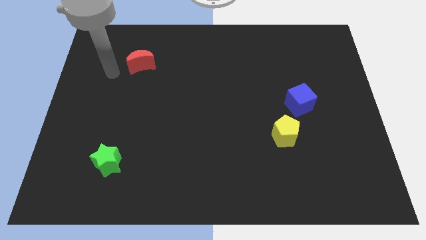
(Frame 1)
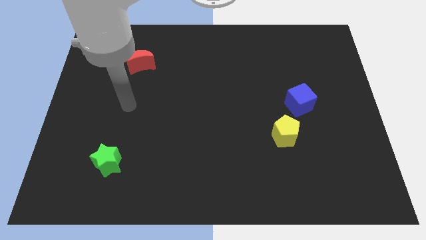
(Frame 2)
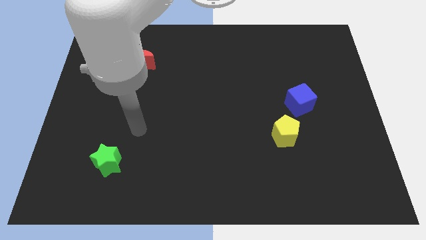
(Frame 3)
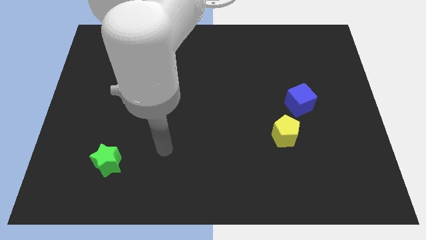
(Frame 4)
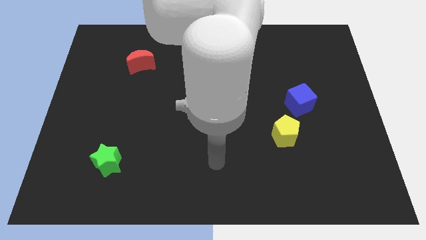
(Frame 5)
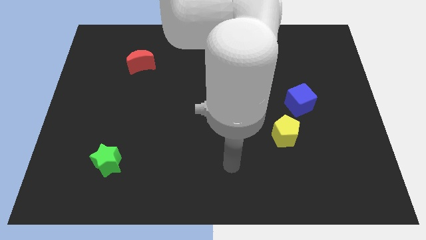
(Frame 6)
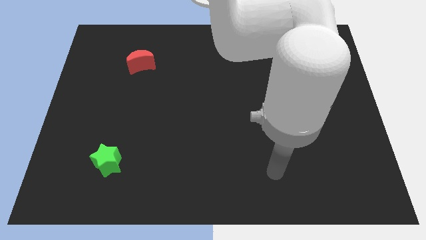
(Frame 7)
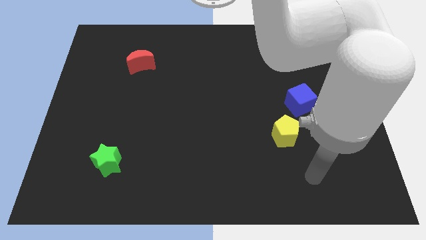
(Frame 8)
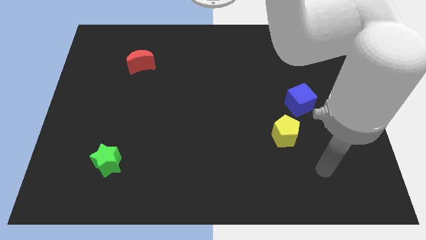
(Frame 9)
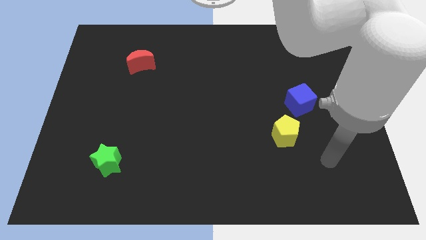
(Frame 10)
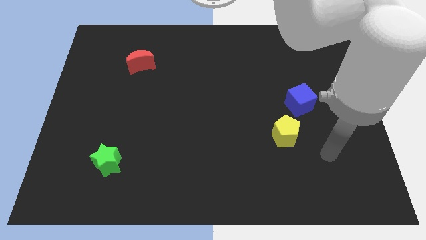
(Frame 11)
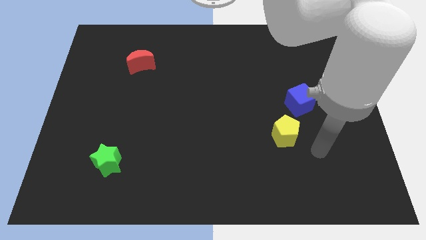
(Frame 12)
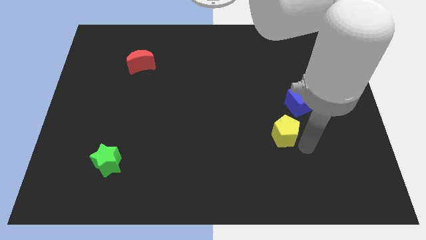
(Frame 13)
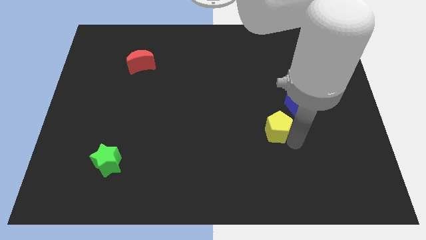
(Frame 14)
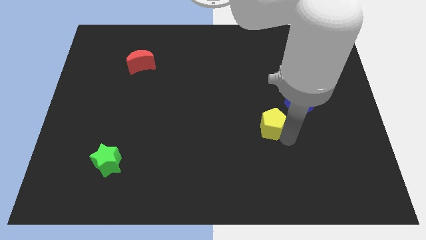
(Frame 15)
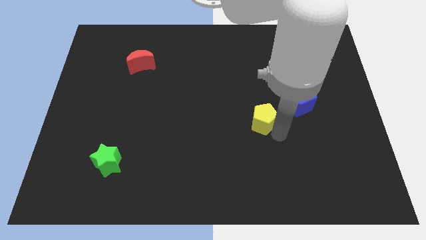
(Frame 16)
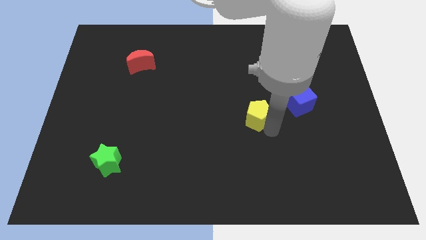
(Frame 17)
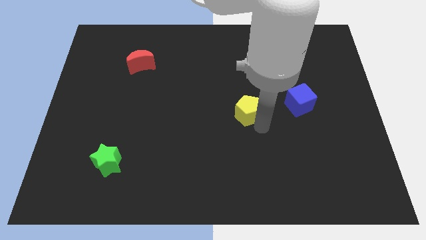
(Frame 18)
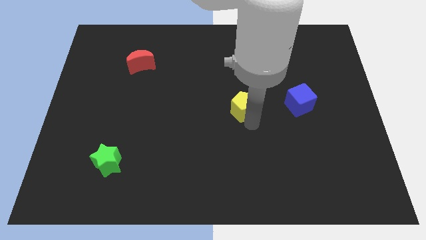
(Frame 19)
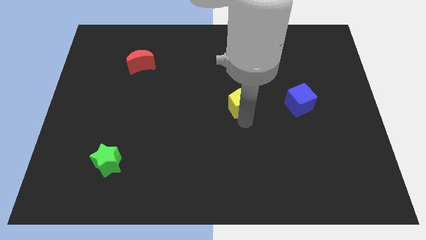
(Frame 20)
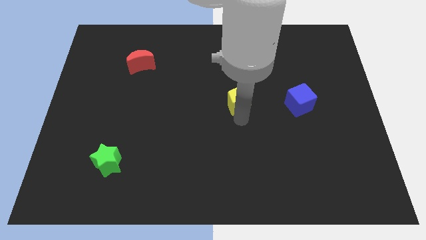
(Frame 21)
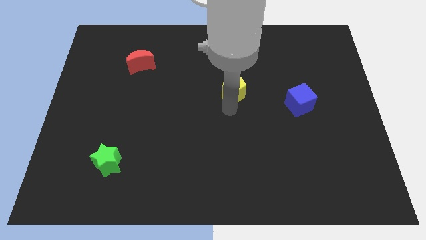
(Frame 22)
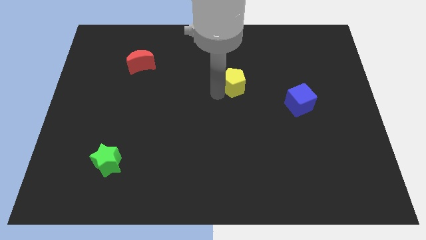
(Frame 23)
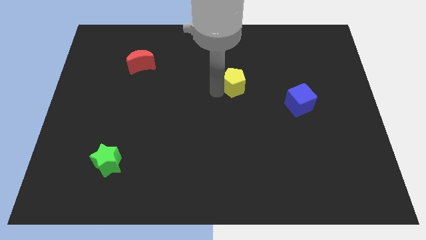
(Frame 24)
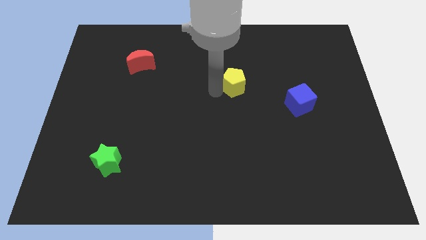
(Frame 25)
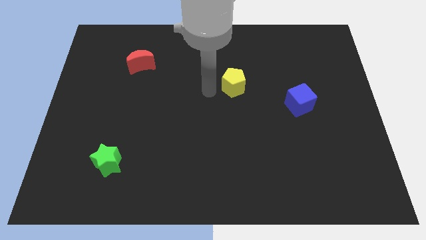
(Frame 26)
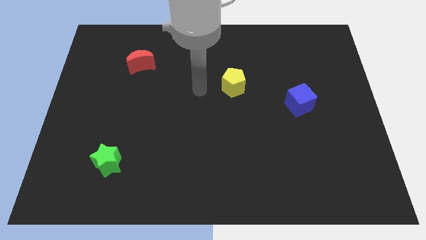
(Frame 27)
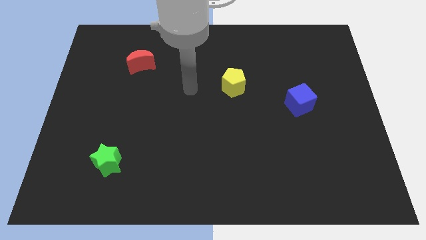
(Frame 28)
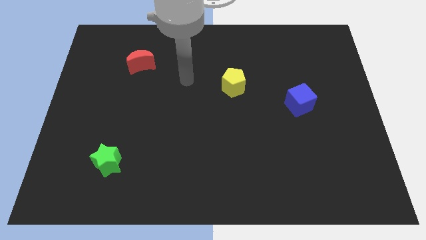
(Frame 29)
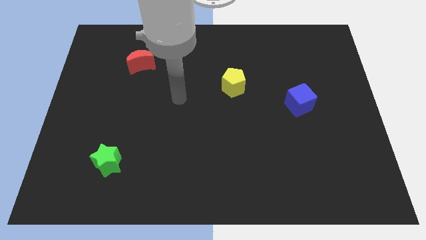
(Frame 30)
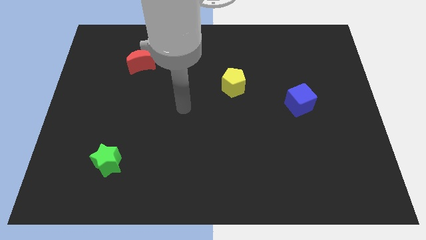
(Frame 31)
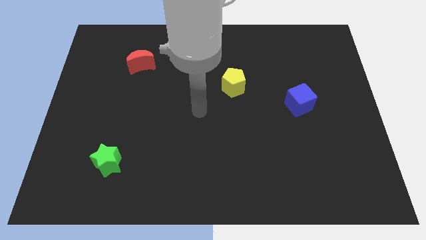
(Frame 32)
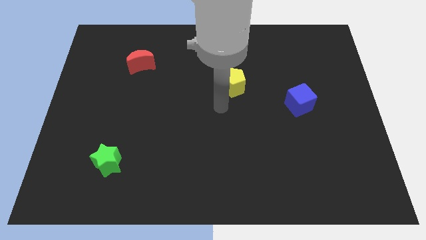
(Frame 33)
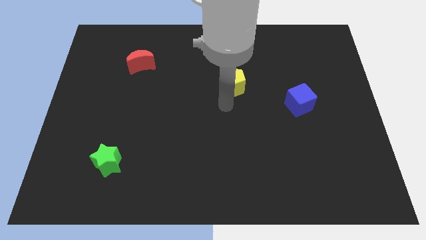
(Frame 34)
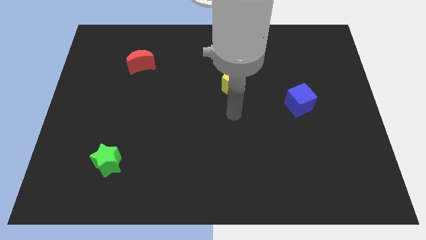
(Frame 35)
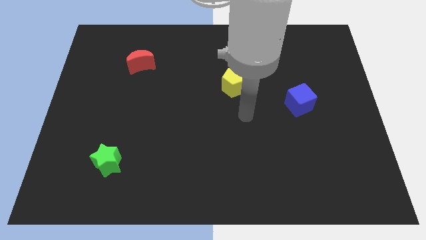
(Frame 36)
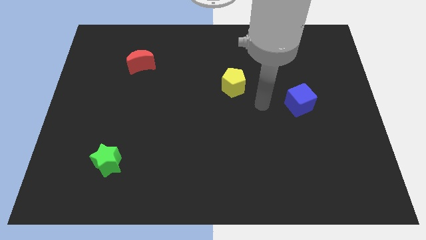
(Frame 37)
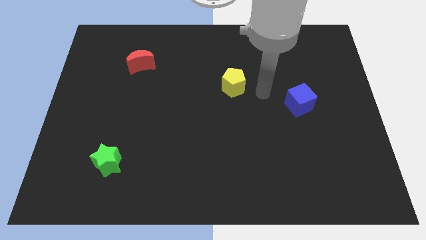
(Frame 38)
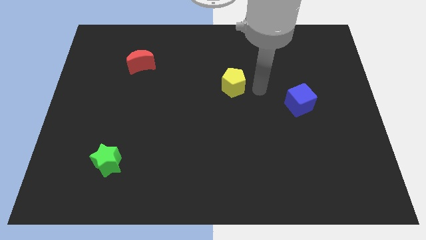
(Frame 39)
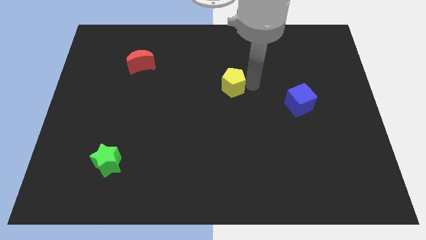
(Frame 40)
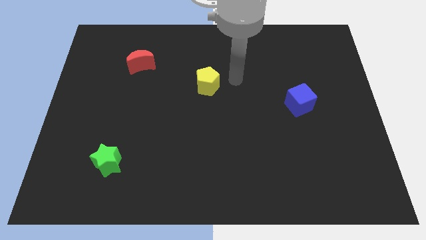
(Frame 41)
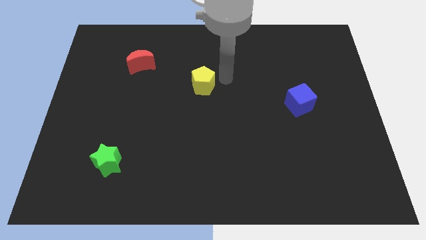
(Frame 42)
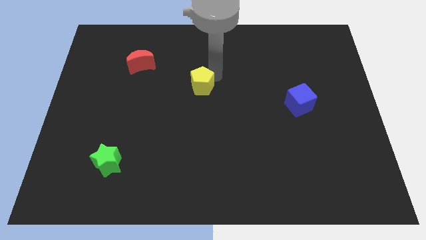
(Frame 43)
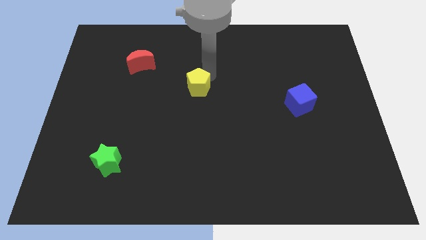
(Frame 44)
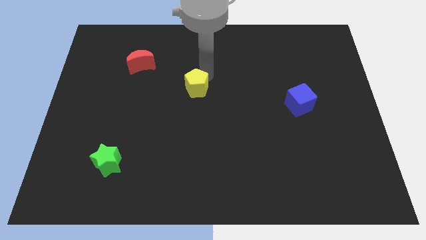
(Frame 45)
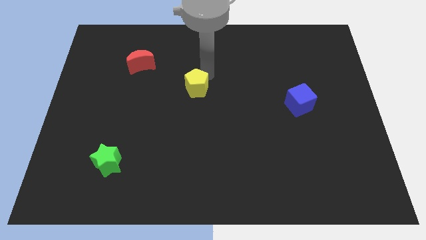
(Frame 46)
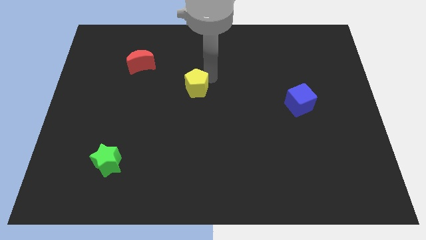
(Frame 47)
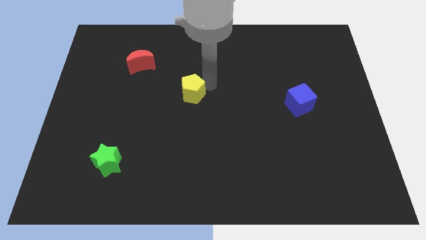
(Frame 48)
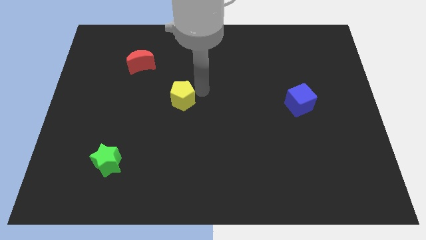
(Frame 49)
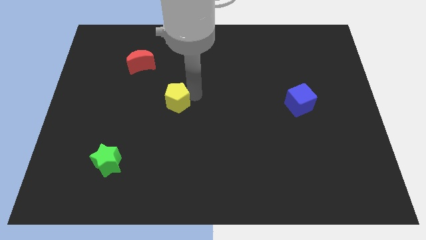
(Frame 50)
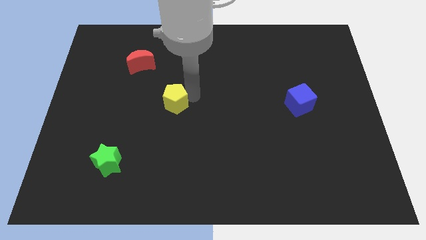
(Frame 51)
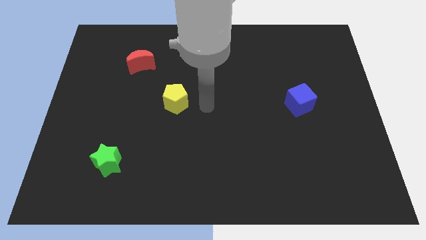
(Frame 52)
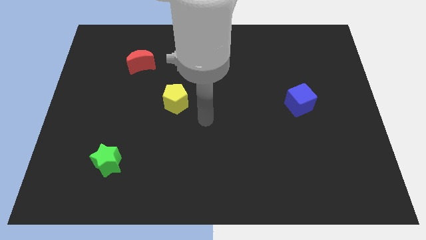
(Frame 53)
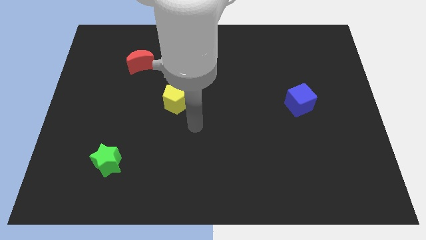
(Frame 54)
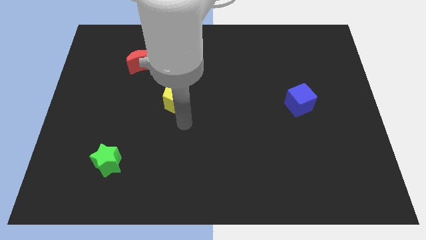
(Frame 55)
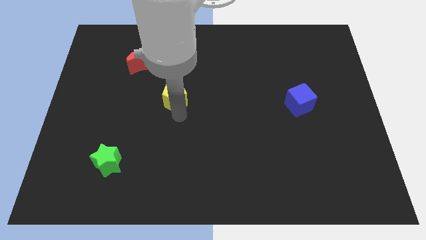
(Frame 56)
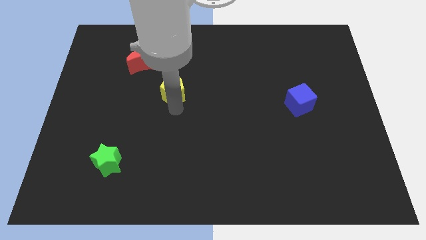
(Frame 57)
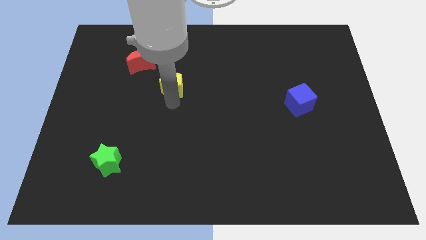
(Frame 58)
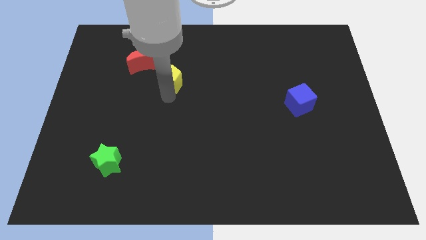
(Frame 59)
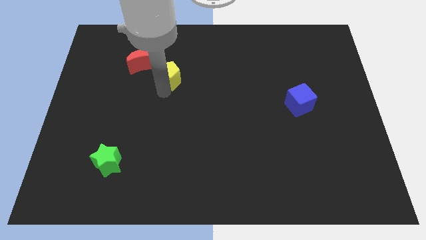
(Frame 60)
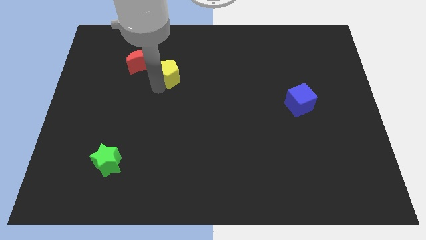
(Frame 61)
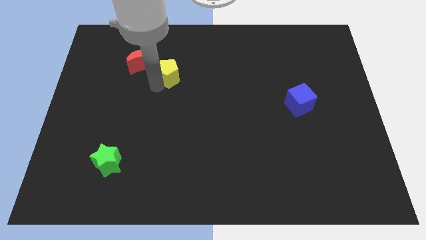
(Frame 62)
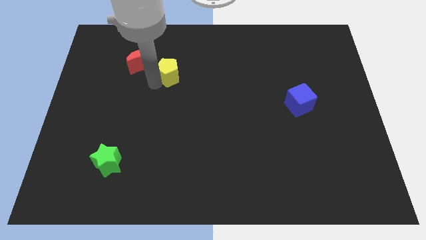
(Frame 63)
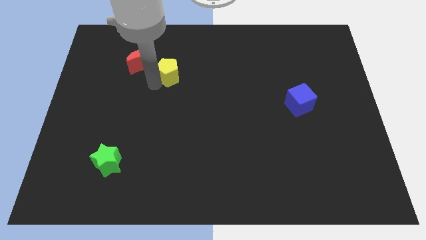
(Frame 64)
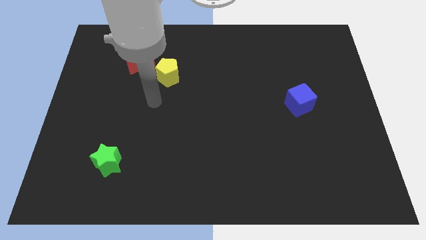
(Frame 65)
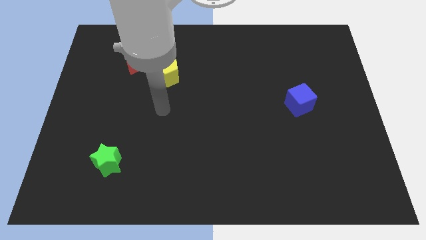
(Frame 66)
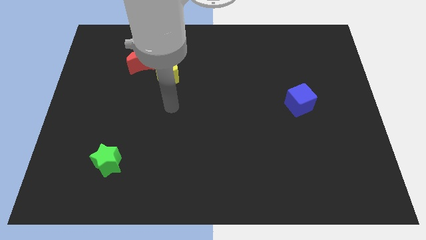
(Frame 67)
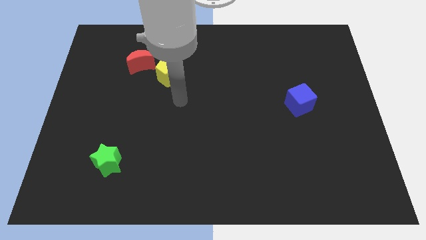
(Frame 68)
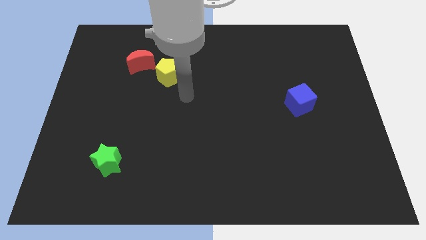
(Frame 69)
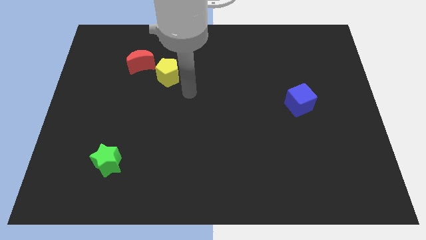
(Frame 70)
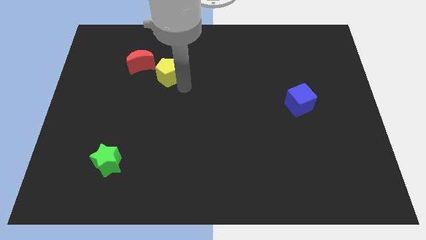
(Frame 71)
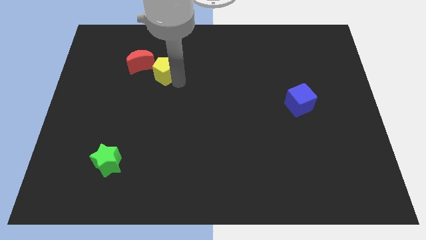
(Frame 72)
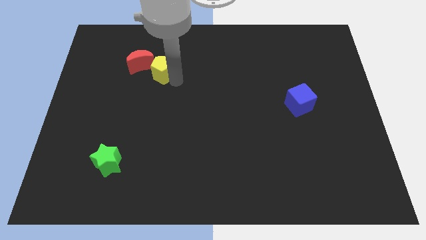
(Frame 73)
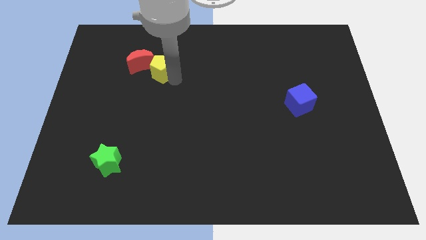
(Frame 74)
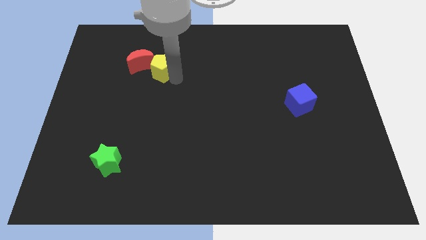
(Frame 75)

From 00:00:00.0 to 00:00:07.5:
push the yellow block towards the red moon
